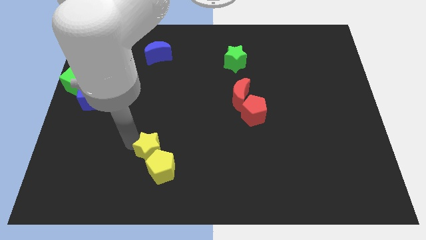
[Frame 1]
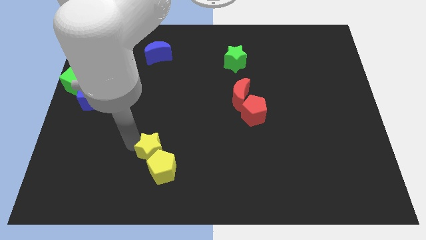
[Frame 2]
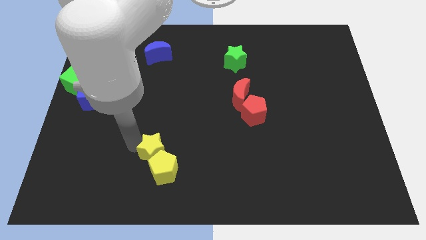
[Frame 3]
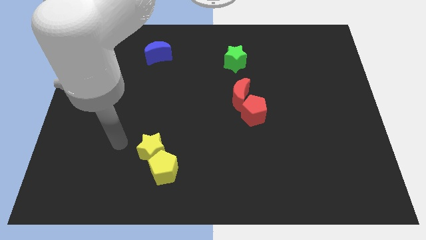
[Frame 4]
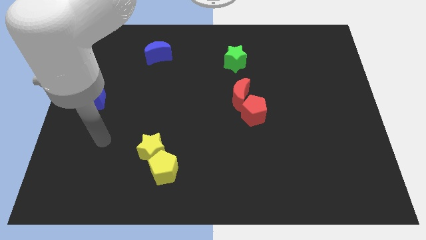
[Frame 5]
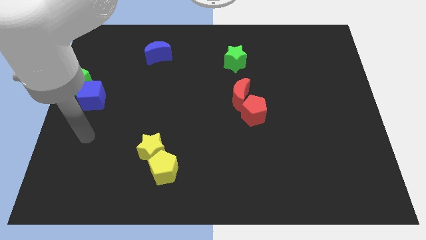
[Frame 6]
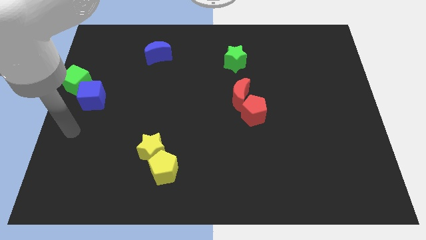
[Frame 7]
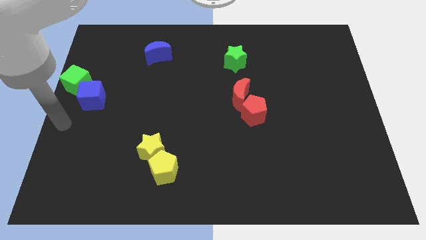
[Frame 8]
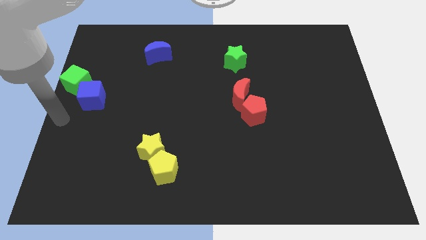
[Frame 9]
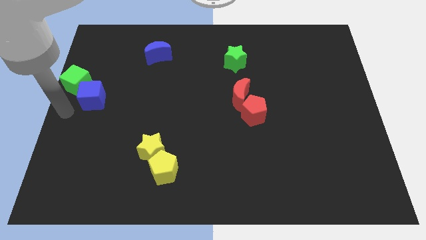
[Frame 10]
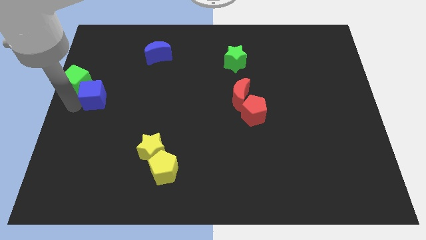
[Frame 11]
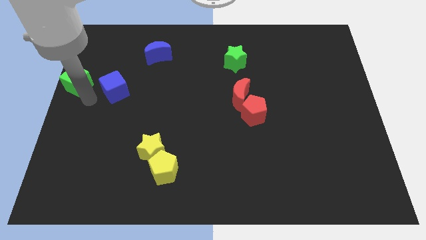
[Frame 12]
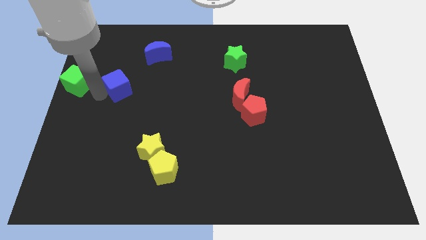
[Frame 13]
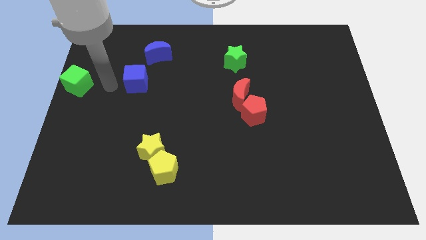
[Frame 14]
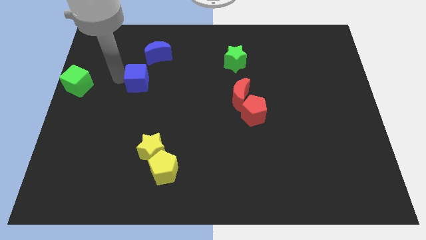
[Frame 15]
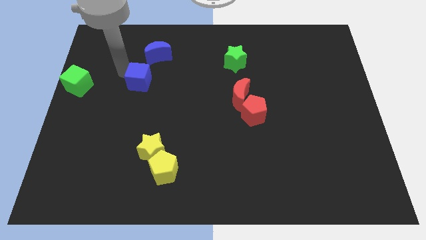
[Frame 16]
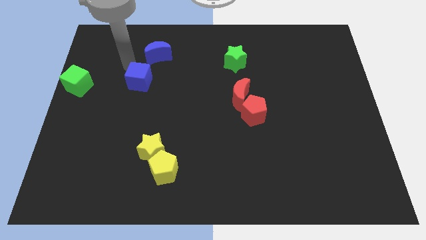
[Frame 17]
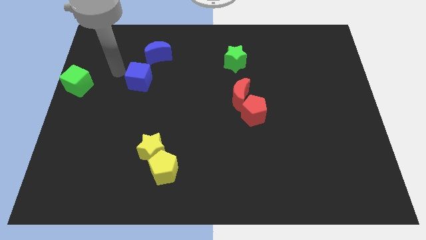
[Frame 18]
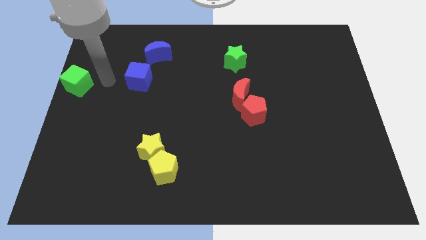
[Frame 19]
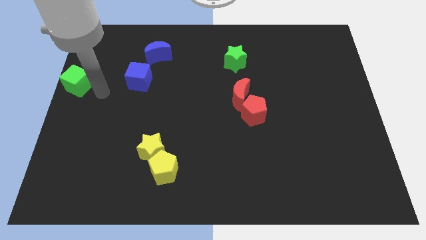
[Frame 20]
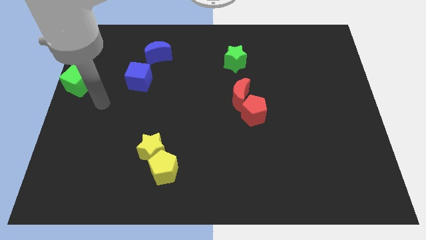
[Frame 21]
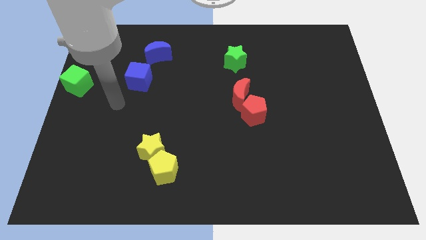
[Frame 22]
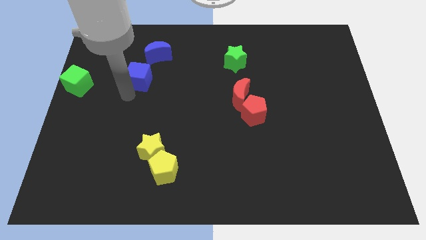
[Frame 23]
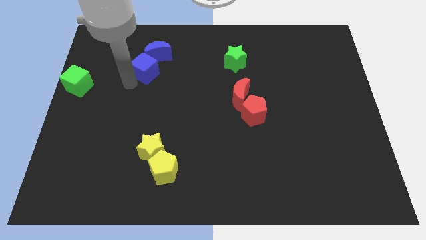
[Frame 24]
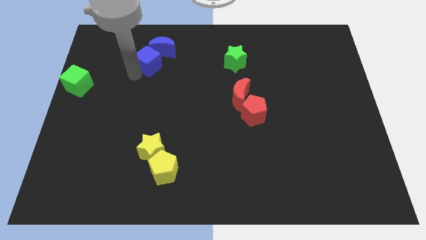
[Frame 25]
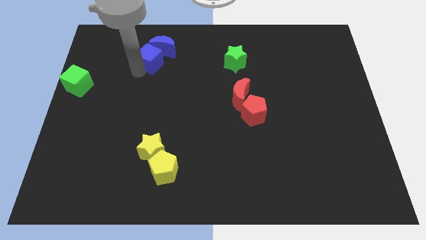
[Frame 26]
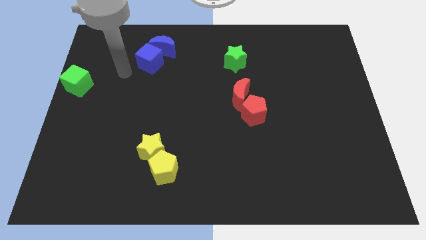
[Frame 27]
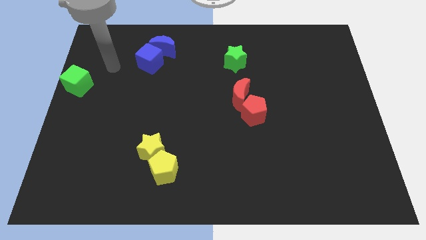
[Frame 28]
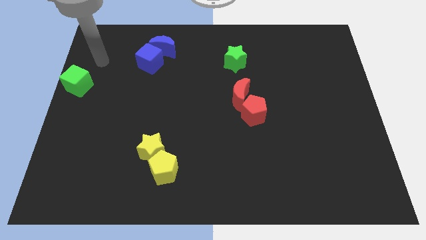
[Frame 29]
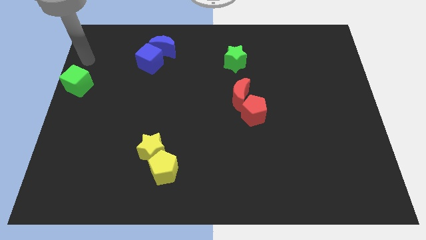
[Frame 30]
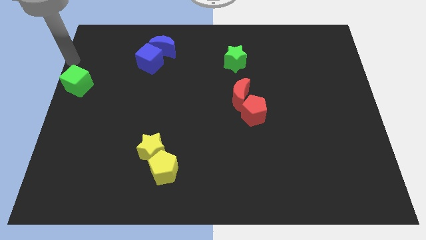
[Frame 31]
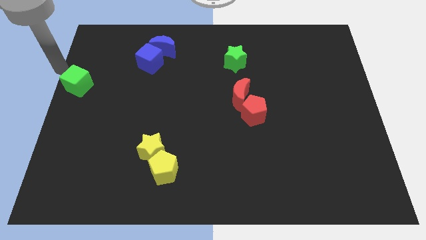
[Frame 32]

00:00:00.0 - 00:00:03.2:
move the blue cube towards the blue crescent

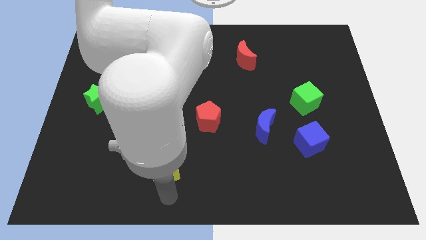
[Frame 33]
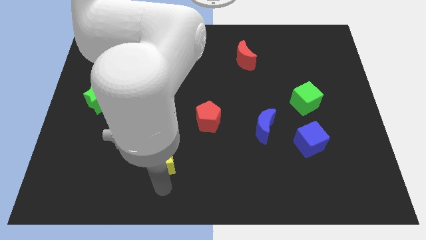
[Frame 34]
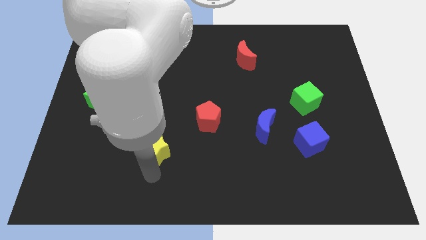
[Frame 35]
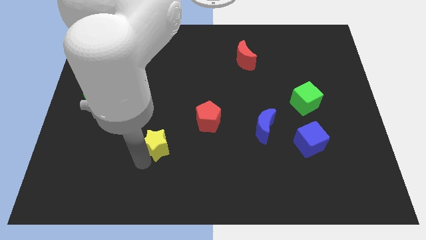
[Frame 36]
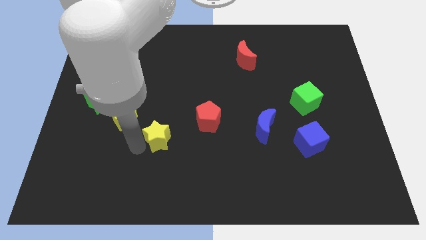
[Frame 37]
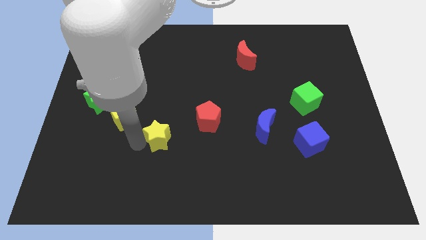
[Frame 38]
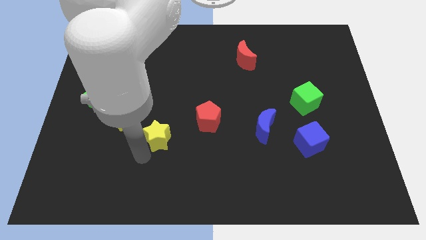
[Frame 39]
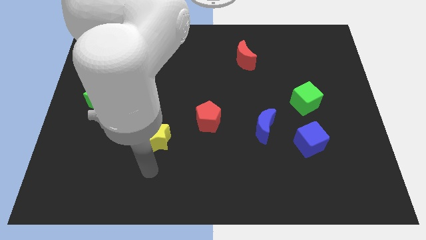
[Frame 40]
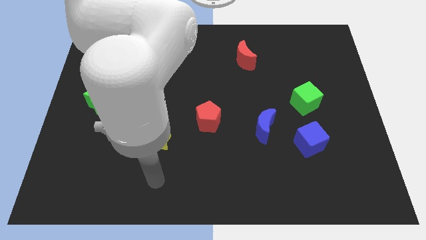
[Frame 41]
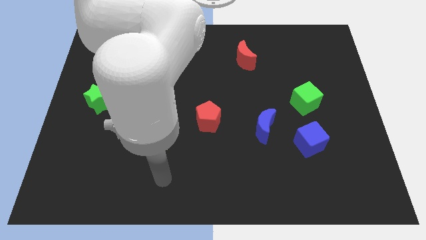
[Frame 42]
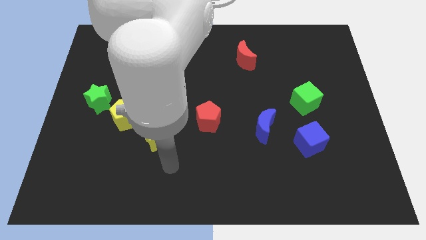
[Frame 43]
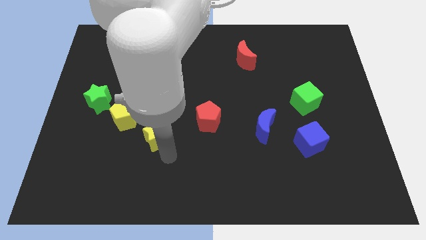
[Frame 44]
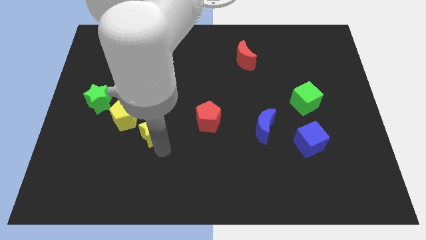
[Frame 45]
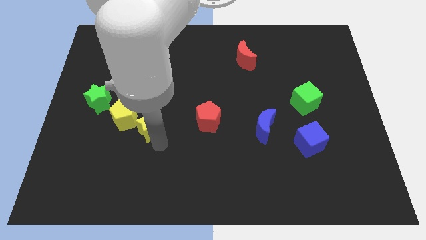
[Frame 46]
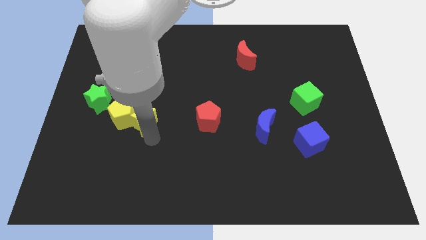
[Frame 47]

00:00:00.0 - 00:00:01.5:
push the yellow star towards the yellow pentagon

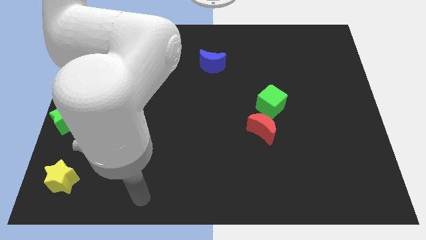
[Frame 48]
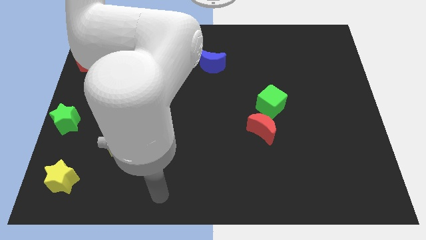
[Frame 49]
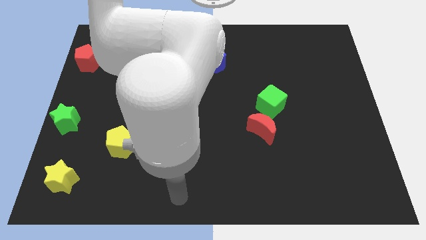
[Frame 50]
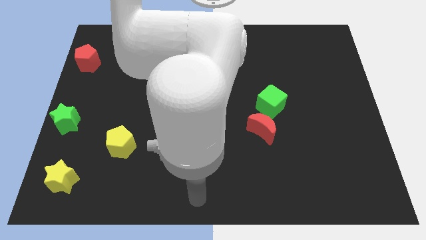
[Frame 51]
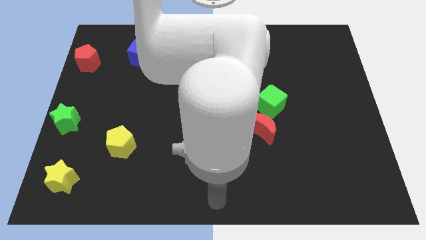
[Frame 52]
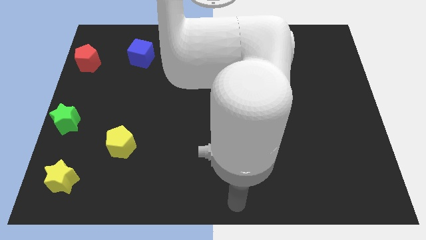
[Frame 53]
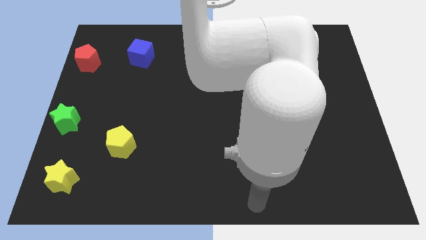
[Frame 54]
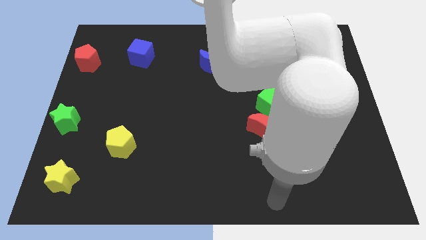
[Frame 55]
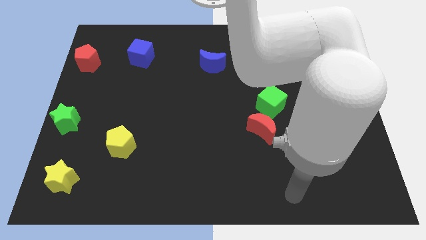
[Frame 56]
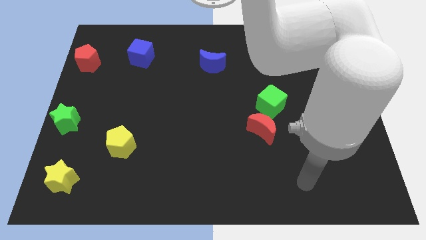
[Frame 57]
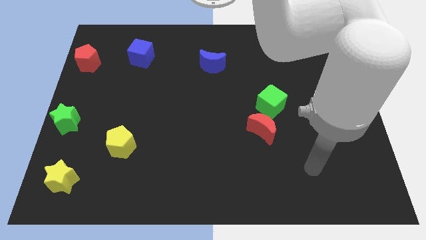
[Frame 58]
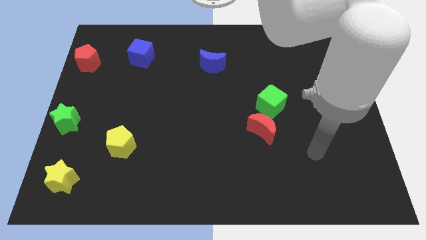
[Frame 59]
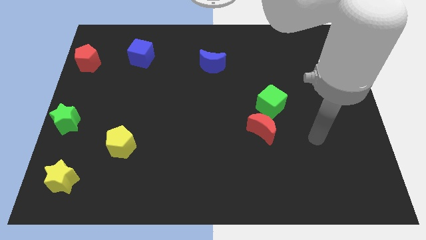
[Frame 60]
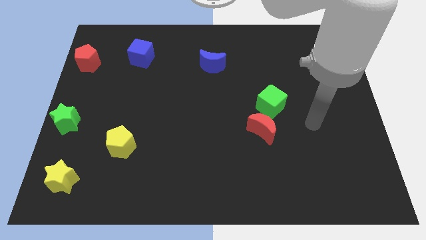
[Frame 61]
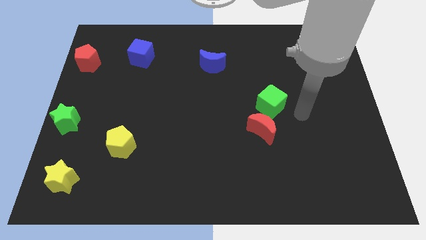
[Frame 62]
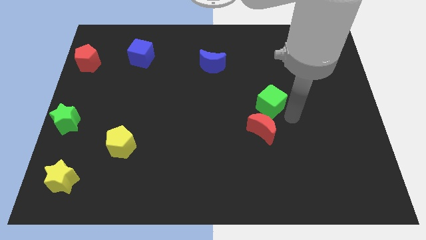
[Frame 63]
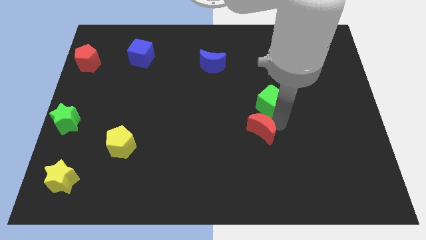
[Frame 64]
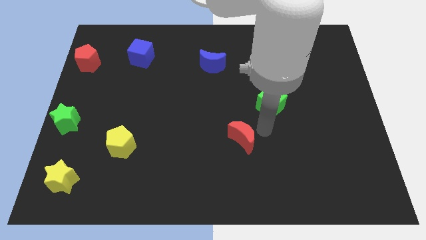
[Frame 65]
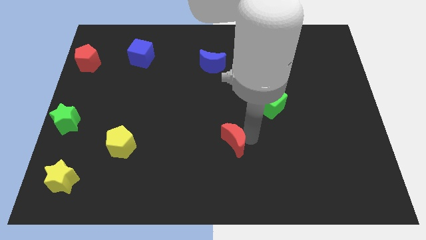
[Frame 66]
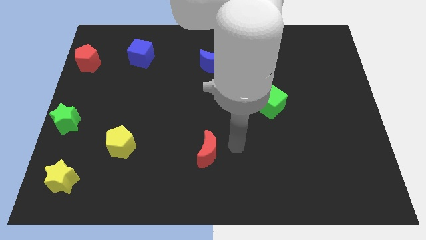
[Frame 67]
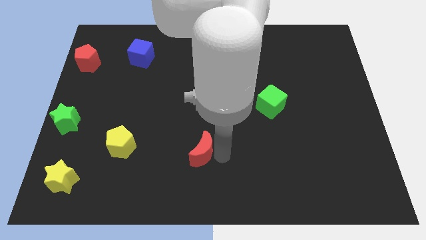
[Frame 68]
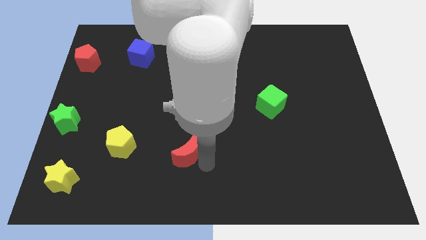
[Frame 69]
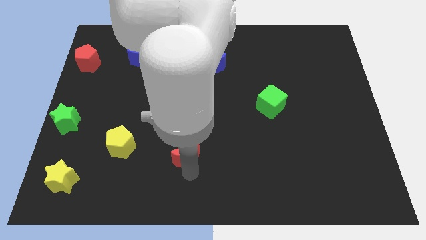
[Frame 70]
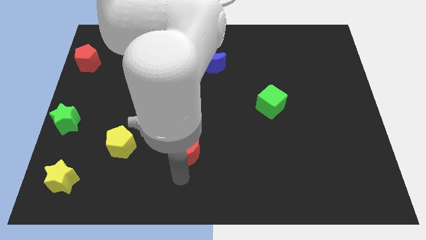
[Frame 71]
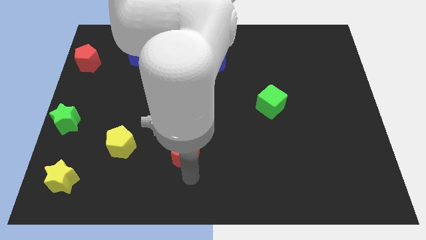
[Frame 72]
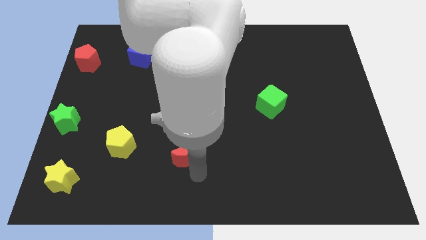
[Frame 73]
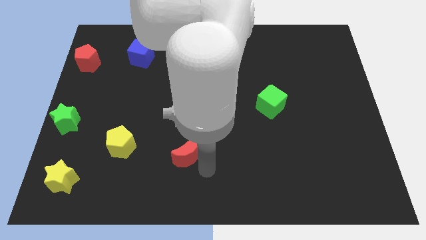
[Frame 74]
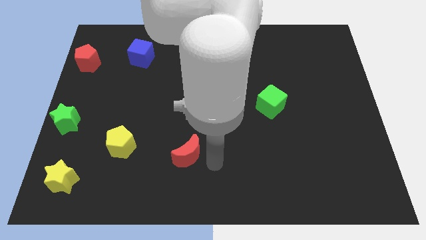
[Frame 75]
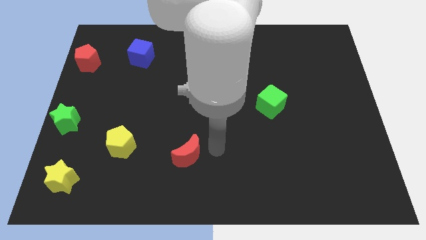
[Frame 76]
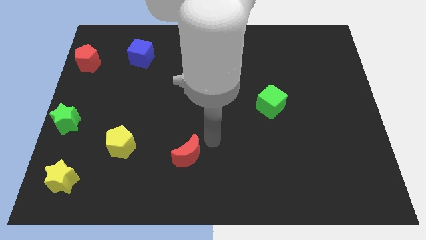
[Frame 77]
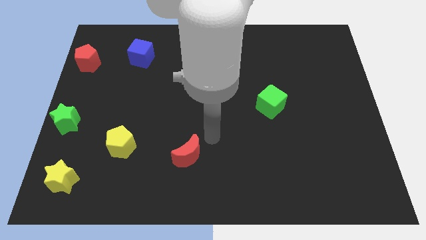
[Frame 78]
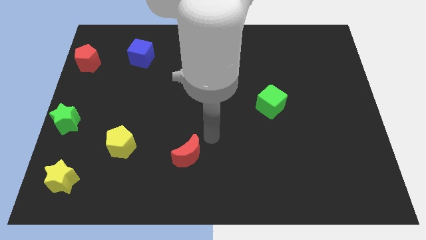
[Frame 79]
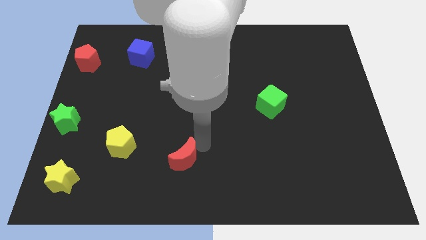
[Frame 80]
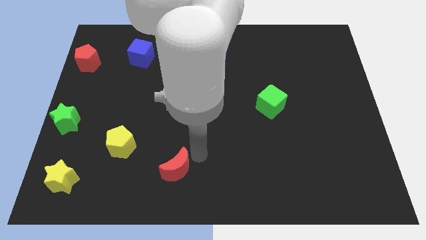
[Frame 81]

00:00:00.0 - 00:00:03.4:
separate the red moon from the green cube

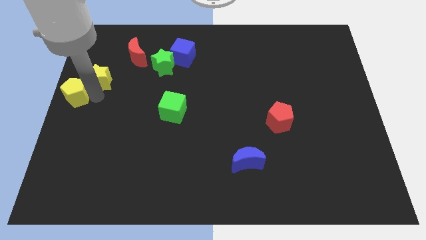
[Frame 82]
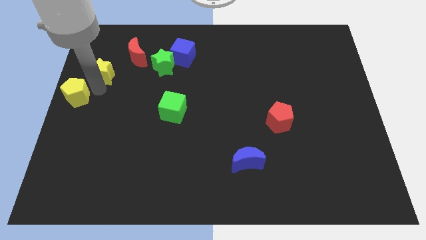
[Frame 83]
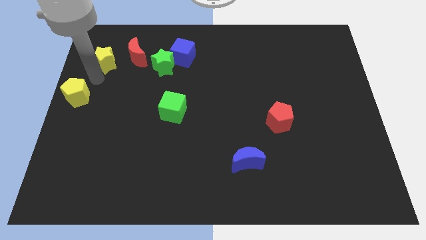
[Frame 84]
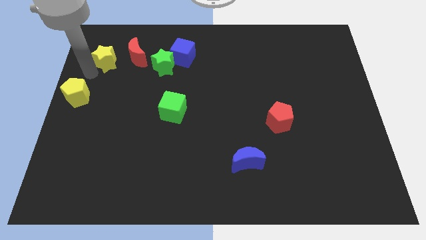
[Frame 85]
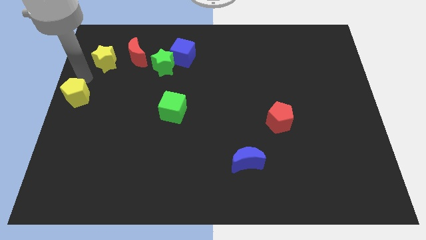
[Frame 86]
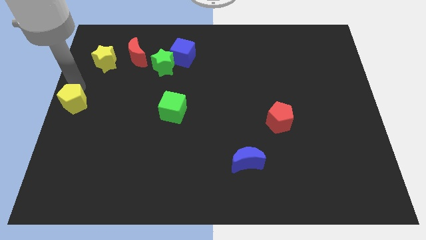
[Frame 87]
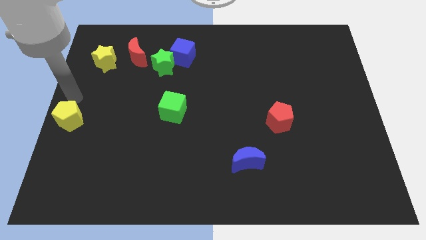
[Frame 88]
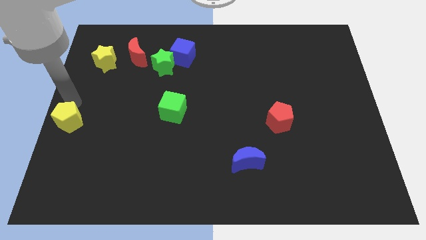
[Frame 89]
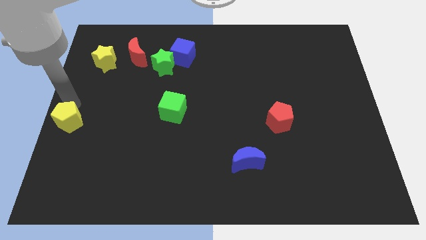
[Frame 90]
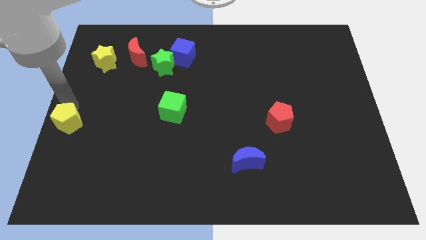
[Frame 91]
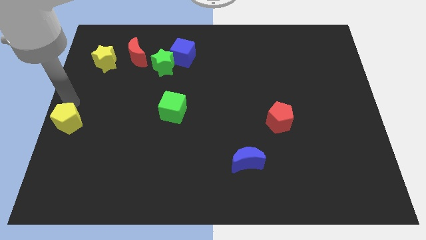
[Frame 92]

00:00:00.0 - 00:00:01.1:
separate yellow star and yellow pentagon from each other
